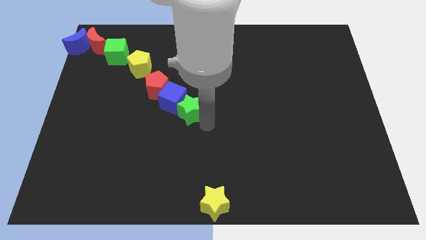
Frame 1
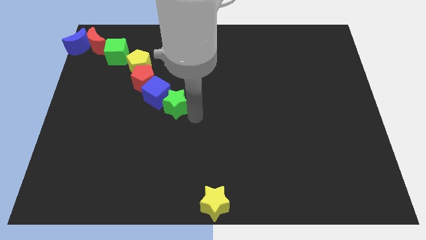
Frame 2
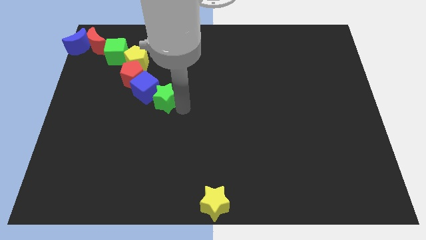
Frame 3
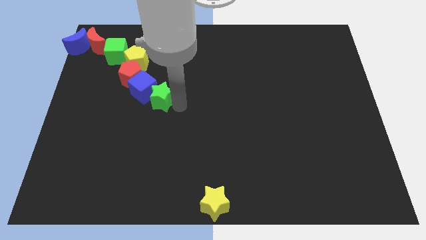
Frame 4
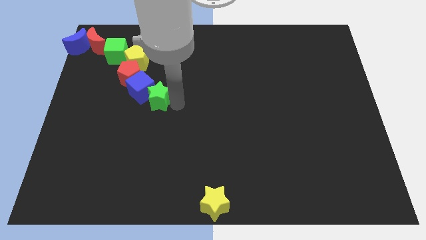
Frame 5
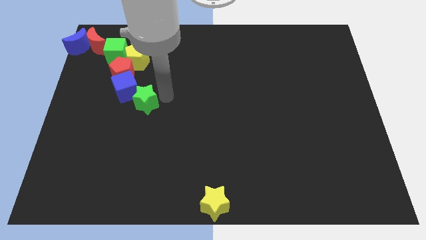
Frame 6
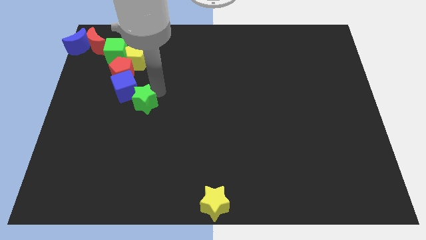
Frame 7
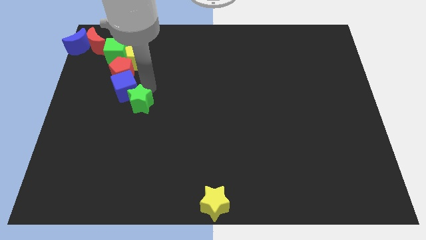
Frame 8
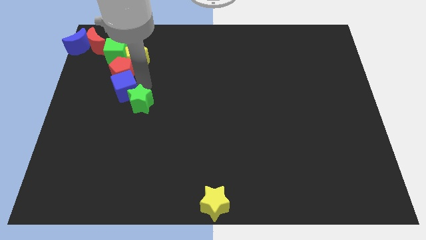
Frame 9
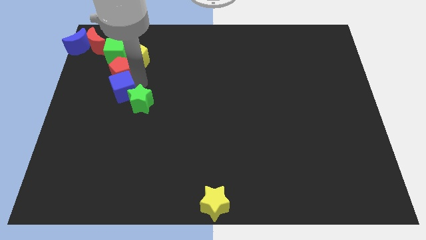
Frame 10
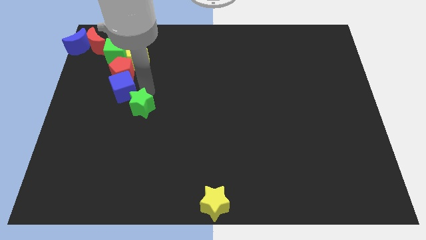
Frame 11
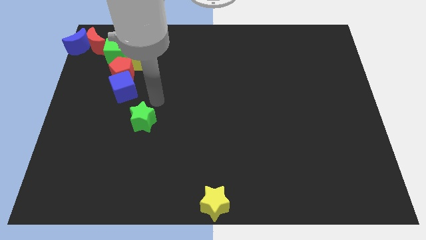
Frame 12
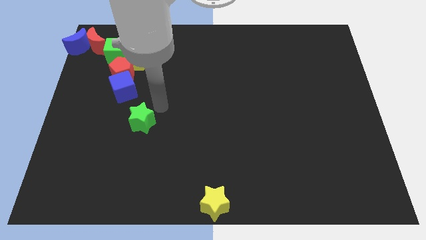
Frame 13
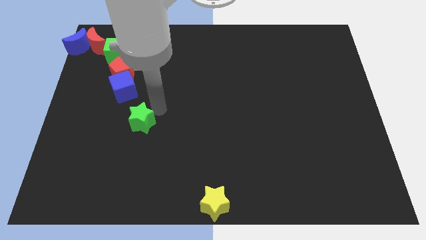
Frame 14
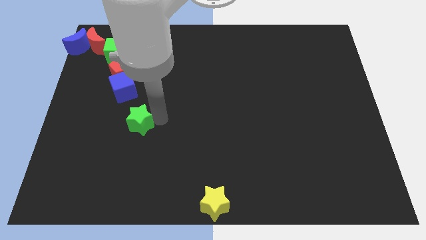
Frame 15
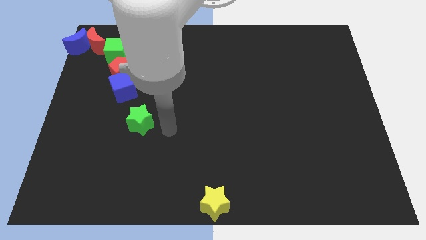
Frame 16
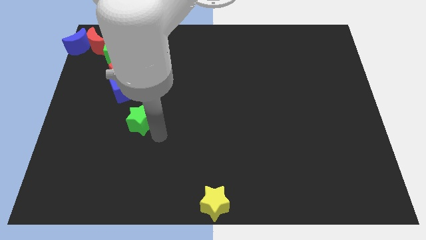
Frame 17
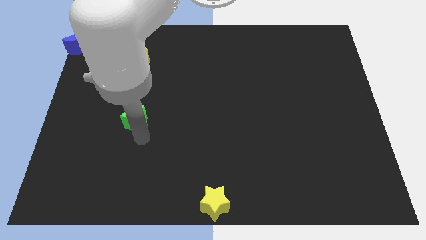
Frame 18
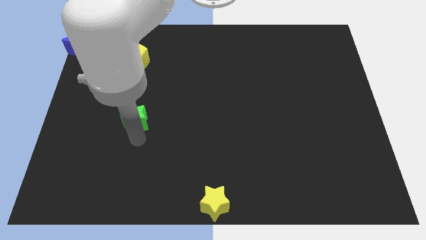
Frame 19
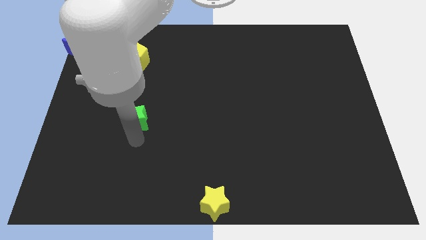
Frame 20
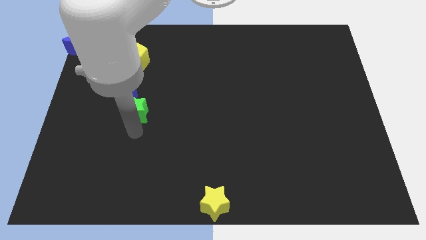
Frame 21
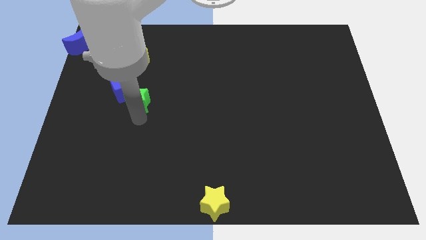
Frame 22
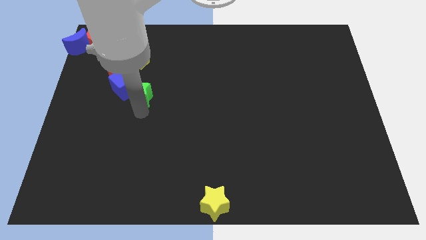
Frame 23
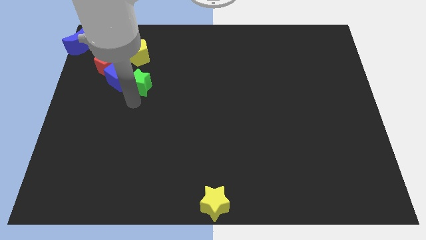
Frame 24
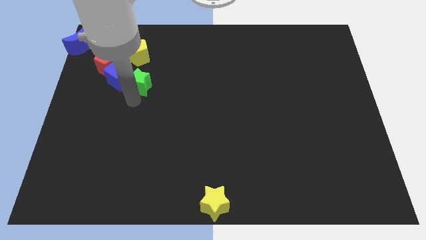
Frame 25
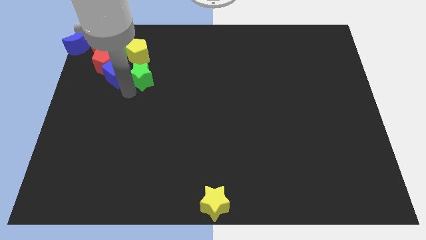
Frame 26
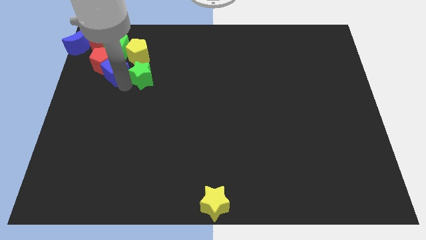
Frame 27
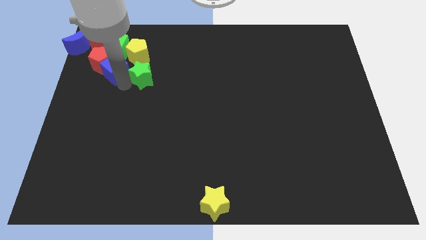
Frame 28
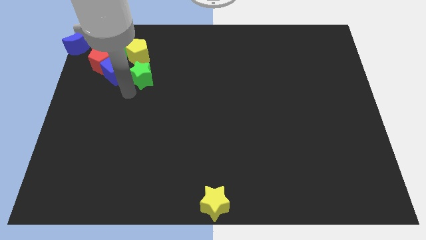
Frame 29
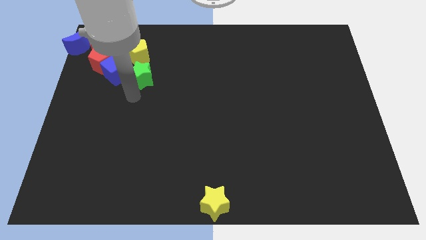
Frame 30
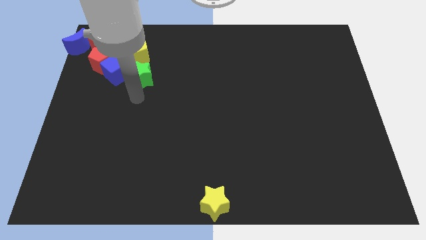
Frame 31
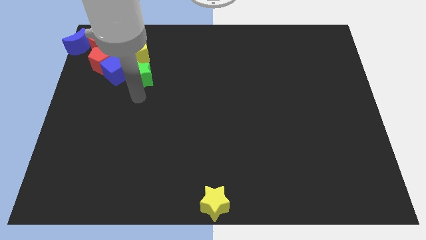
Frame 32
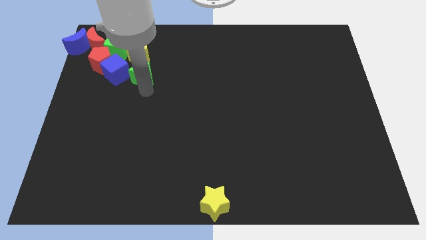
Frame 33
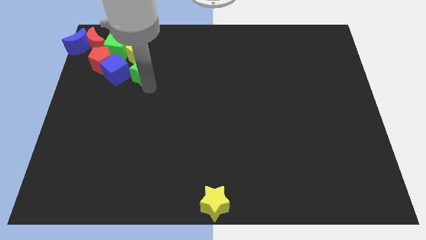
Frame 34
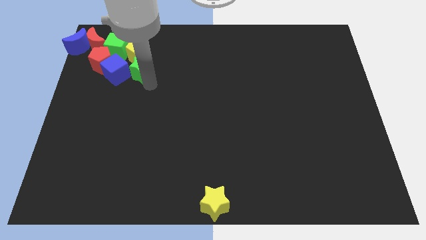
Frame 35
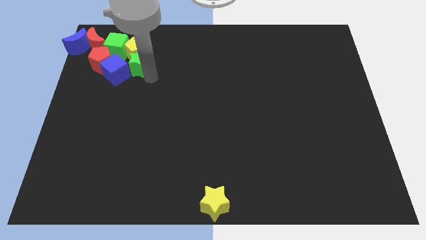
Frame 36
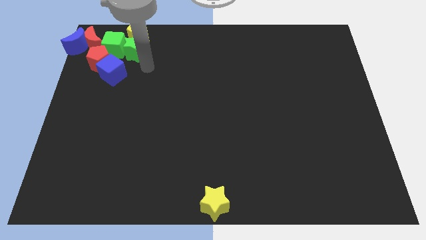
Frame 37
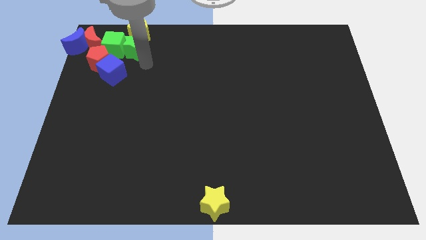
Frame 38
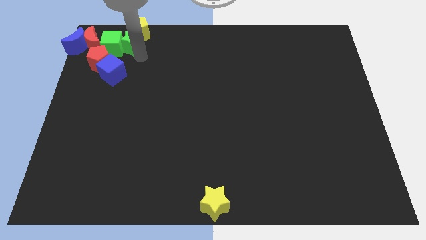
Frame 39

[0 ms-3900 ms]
move the green star to the right of the blue cube

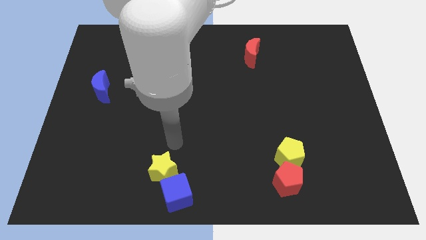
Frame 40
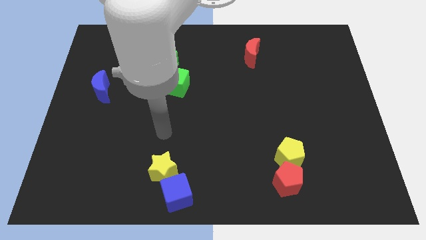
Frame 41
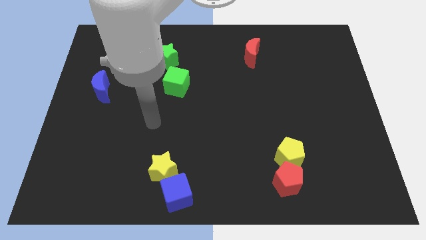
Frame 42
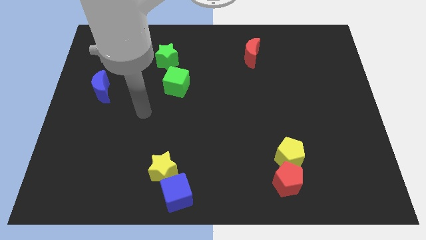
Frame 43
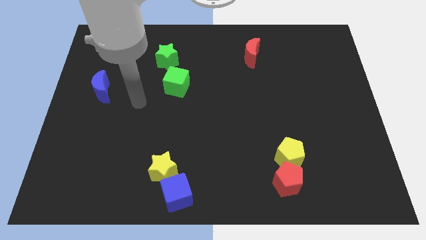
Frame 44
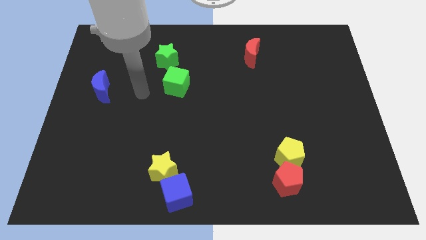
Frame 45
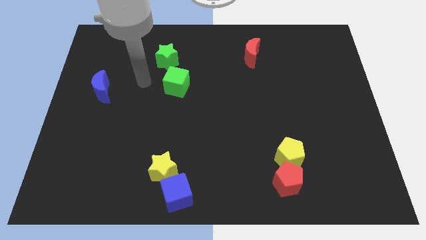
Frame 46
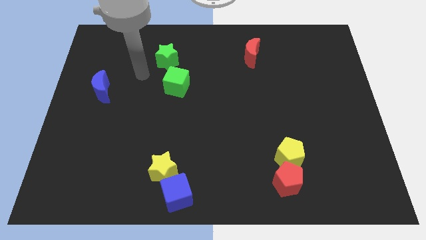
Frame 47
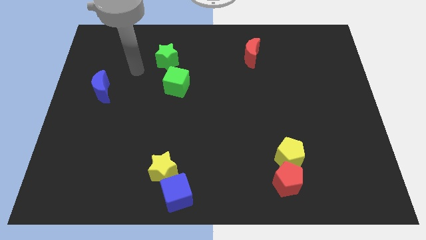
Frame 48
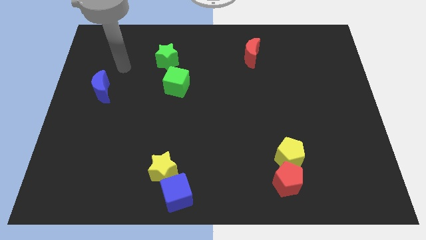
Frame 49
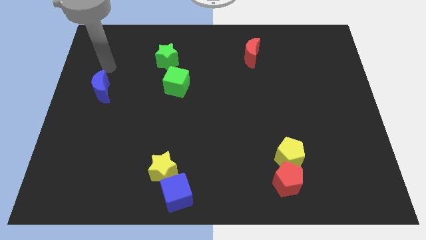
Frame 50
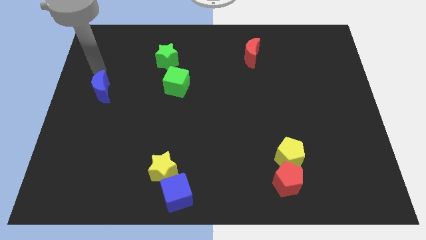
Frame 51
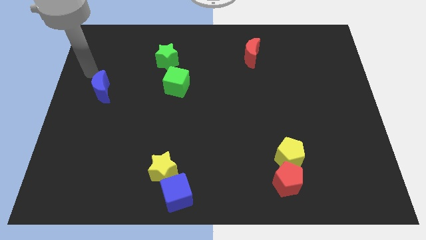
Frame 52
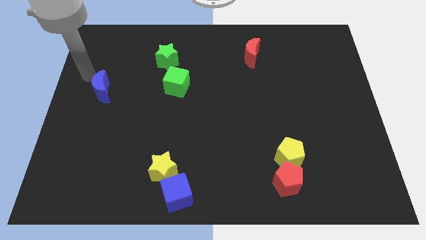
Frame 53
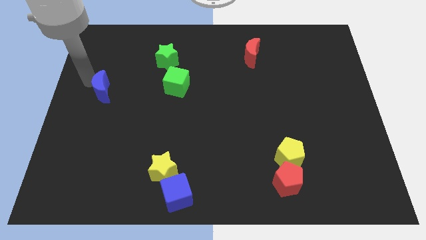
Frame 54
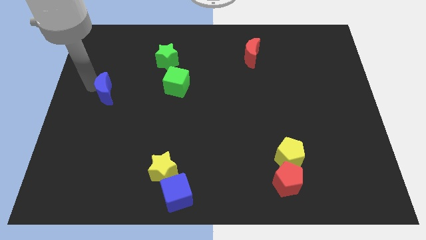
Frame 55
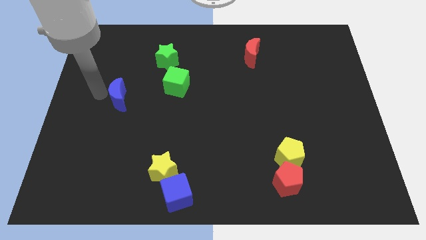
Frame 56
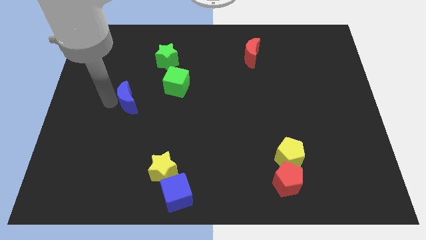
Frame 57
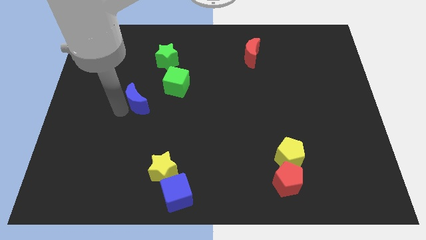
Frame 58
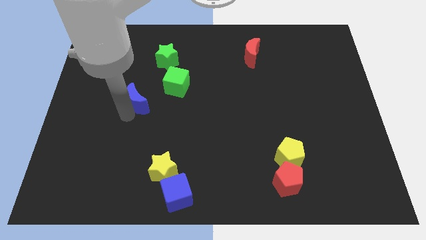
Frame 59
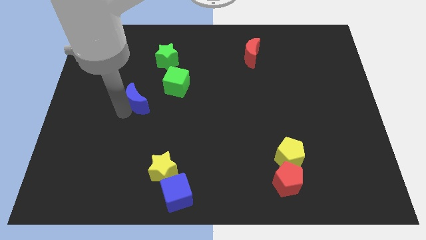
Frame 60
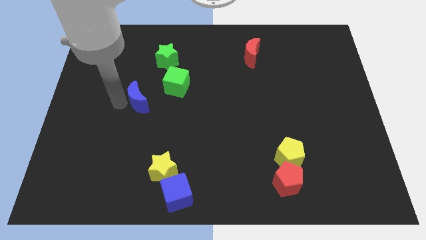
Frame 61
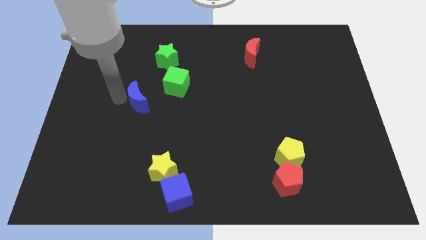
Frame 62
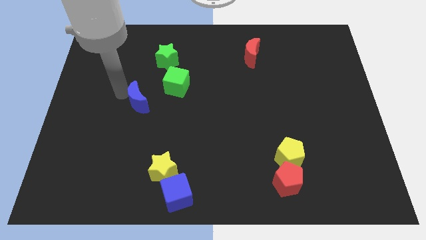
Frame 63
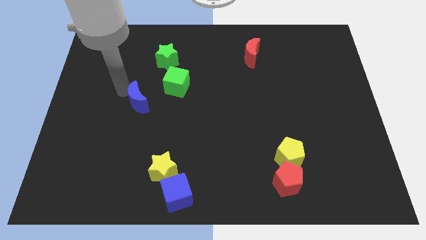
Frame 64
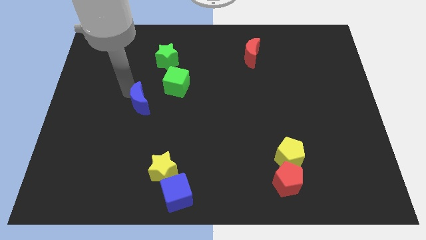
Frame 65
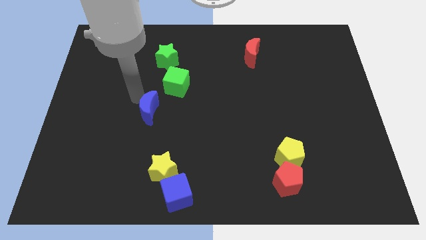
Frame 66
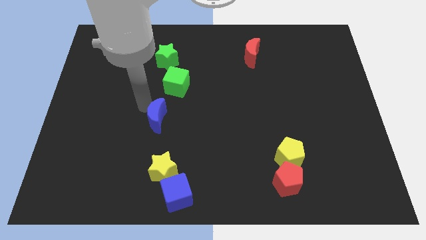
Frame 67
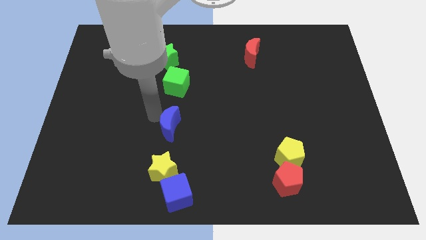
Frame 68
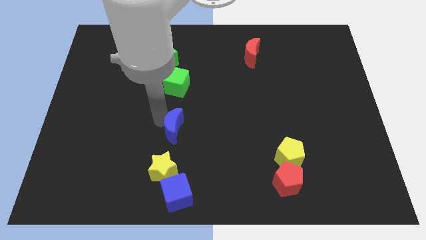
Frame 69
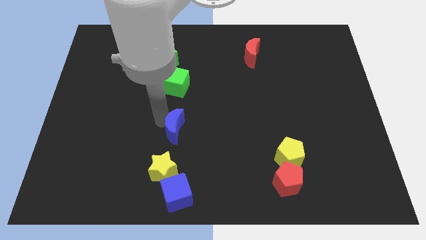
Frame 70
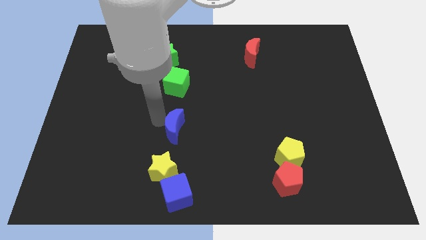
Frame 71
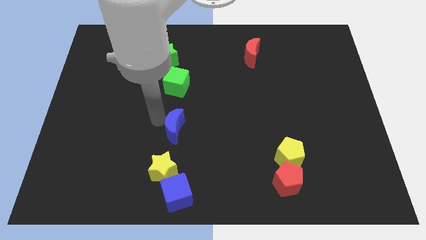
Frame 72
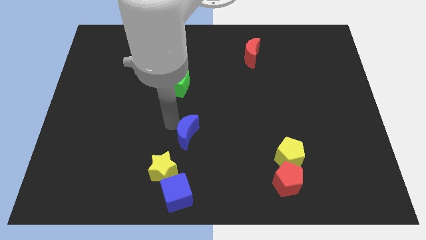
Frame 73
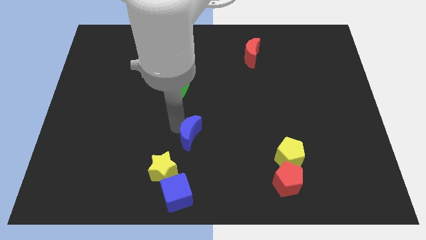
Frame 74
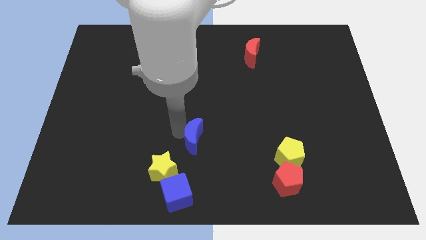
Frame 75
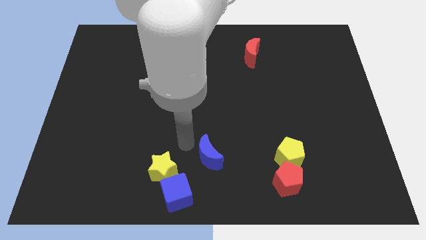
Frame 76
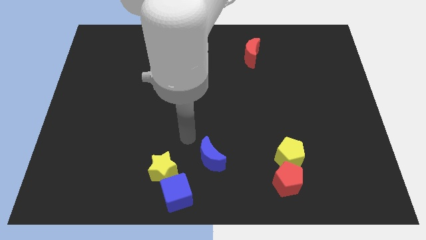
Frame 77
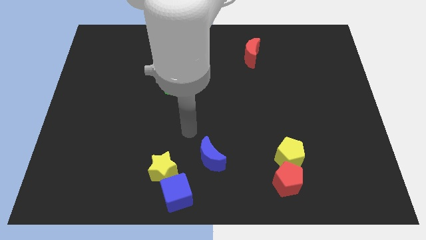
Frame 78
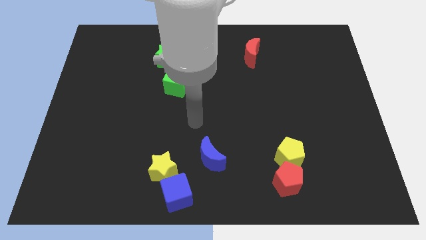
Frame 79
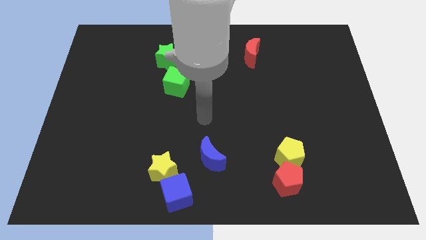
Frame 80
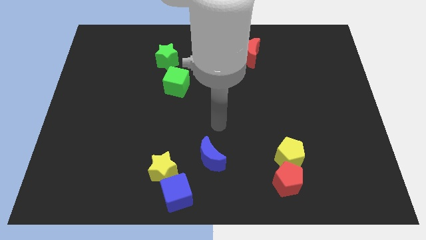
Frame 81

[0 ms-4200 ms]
place the blue moon diagonally bottom right to the green cube

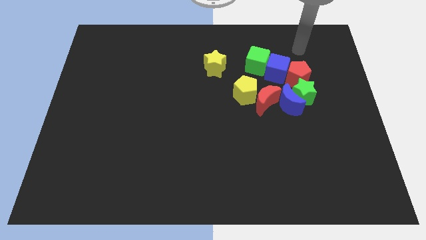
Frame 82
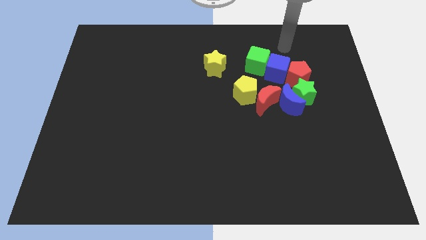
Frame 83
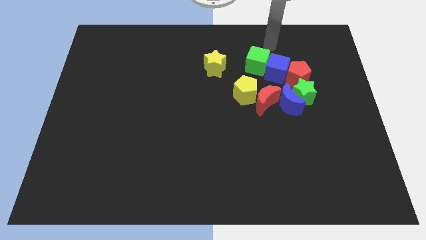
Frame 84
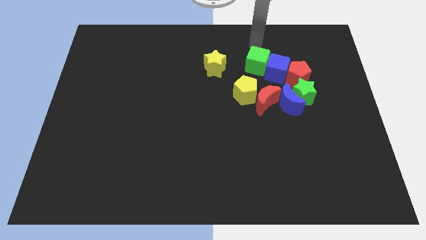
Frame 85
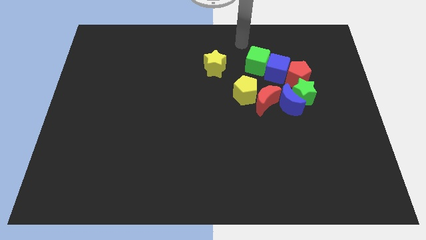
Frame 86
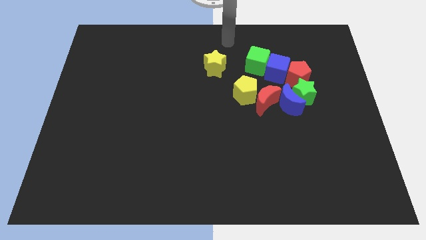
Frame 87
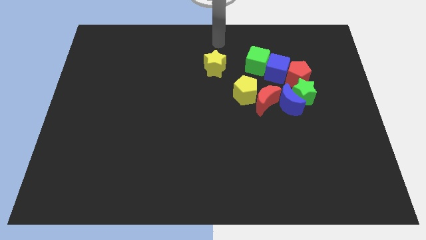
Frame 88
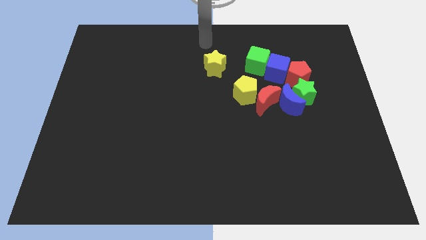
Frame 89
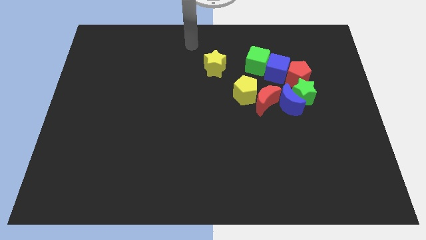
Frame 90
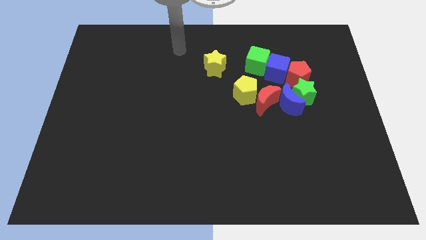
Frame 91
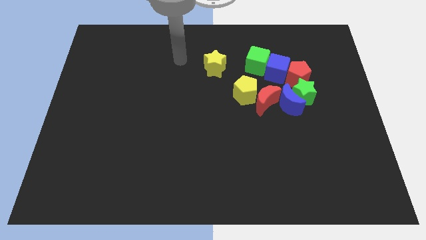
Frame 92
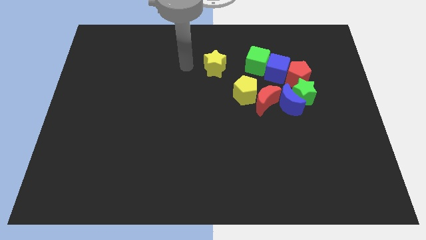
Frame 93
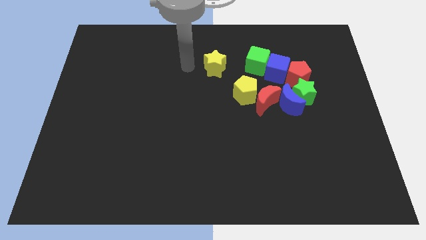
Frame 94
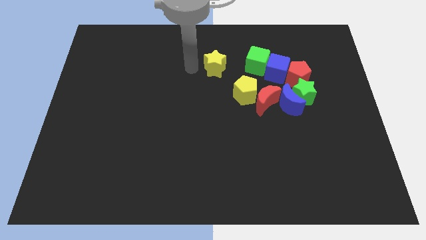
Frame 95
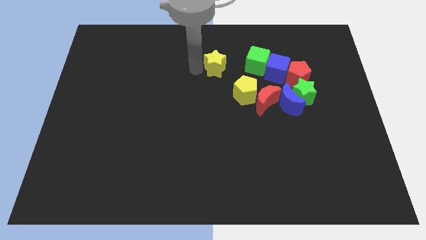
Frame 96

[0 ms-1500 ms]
point the arm to the left of the yellow star
